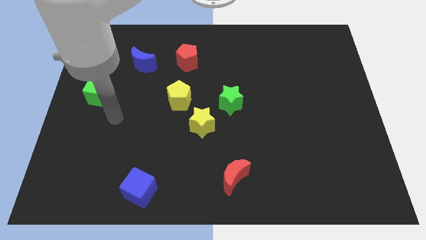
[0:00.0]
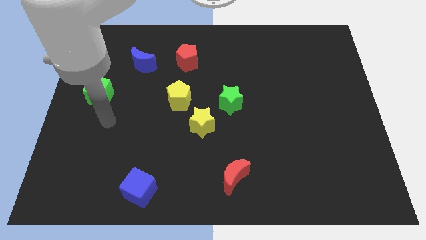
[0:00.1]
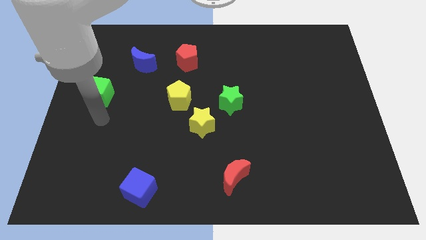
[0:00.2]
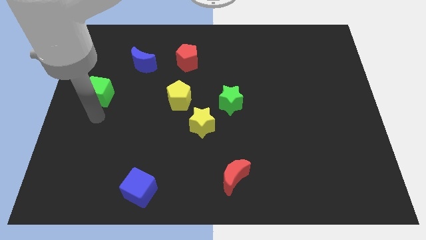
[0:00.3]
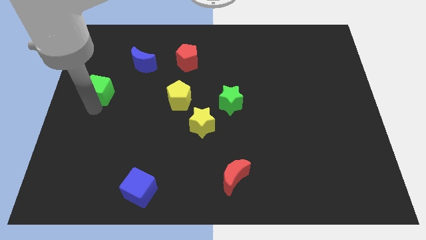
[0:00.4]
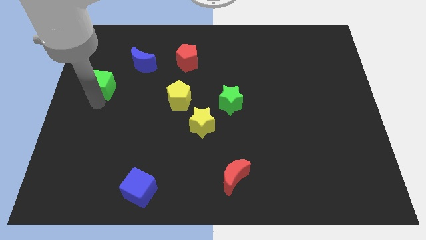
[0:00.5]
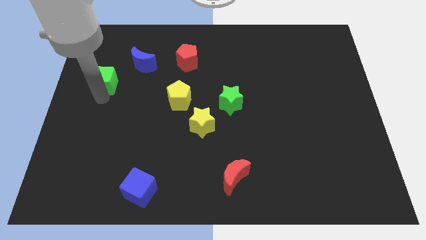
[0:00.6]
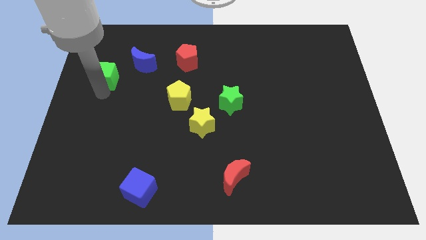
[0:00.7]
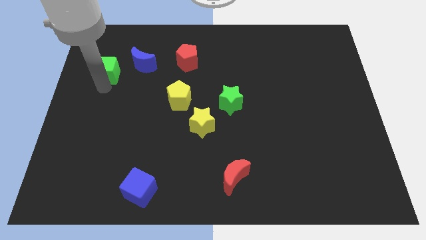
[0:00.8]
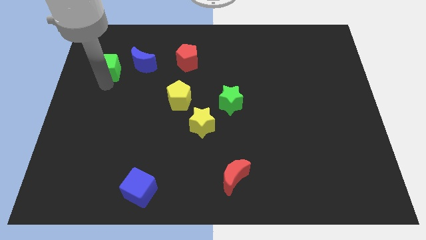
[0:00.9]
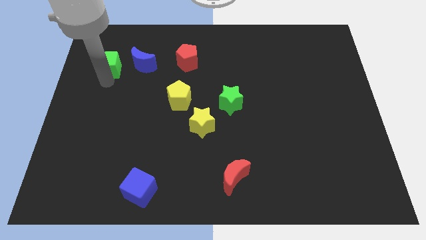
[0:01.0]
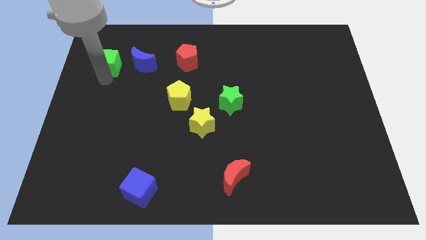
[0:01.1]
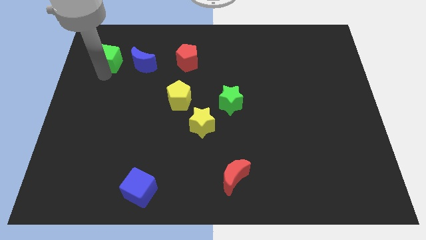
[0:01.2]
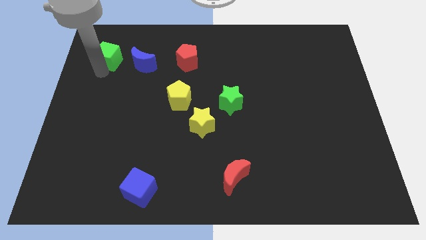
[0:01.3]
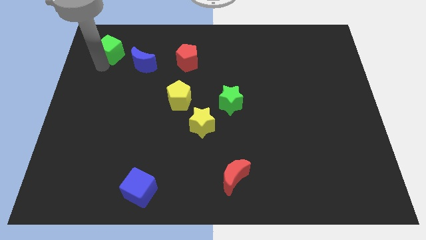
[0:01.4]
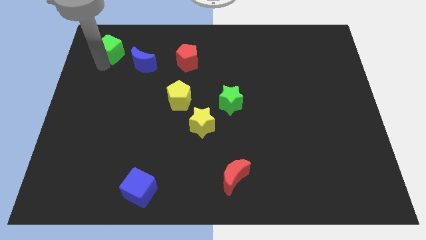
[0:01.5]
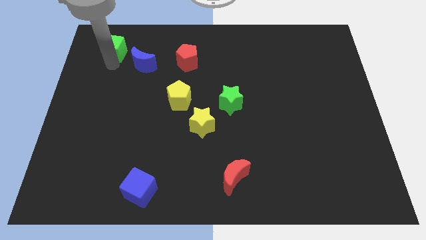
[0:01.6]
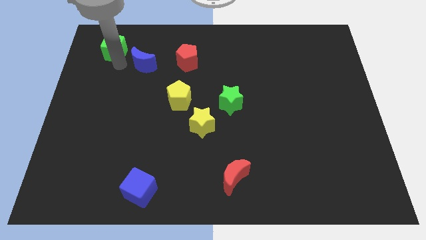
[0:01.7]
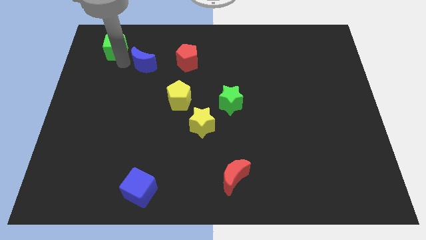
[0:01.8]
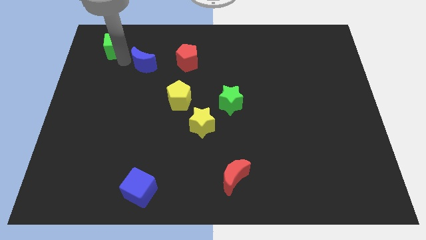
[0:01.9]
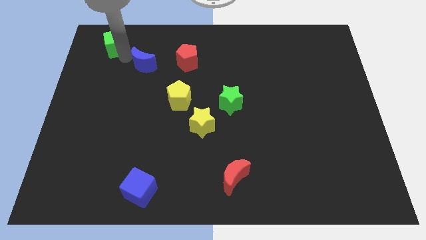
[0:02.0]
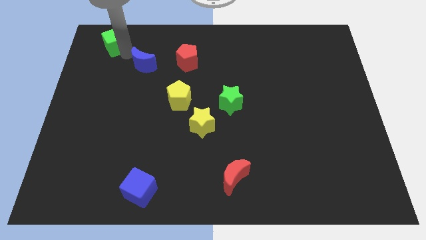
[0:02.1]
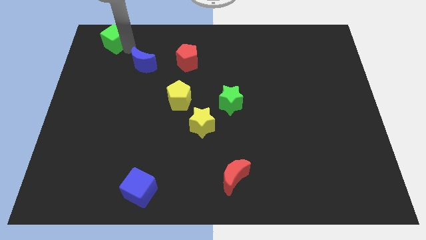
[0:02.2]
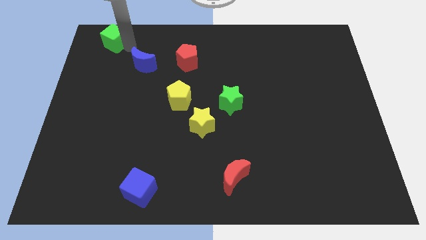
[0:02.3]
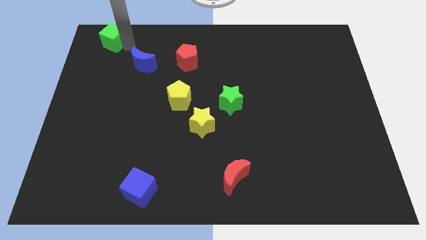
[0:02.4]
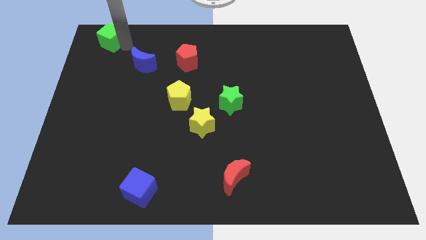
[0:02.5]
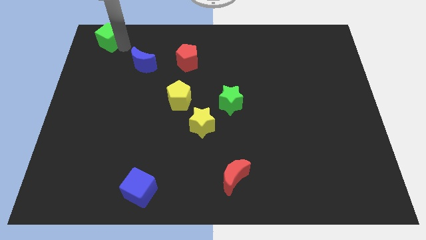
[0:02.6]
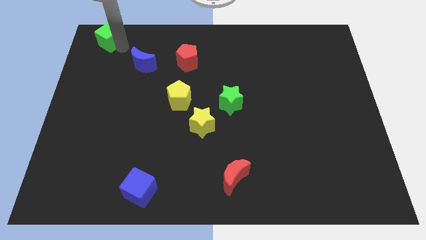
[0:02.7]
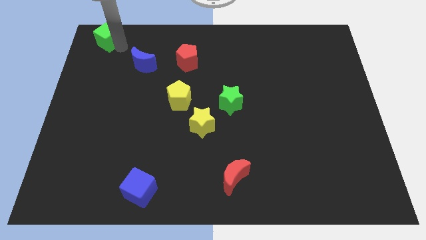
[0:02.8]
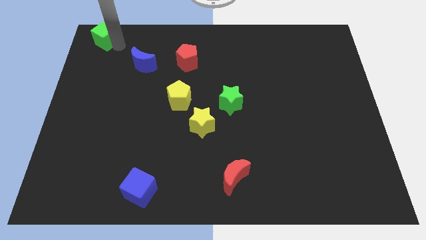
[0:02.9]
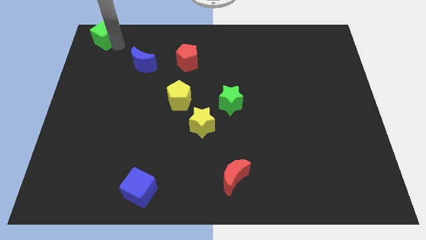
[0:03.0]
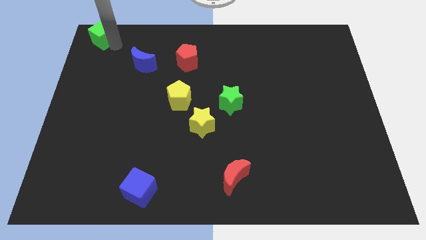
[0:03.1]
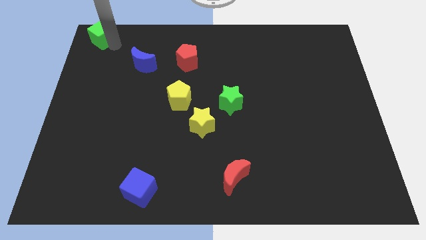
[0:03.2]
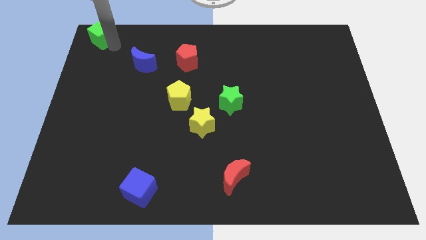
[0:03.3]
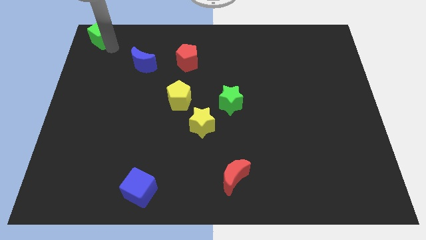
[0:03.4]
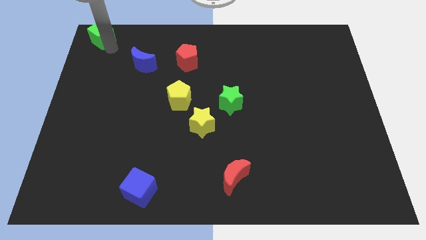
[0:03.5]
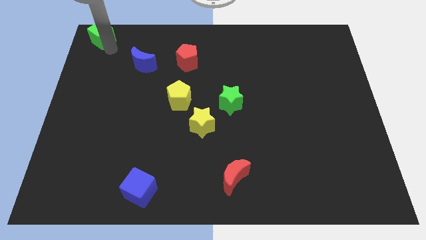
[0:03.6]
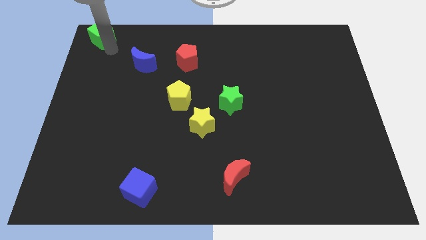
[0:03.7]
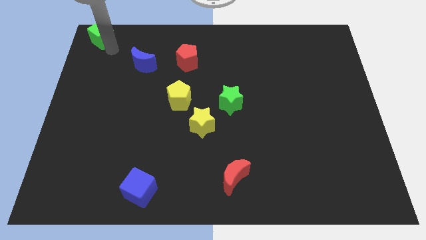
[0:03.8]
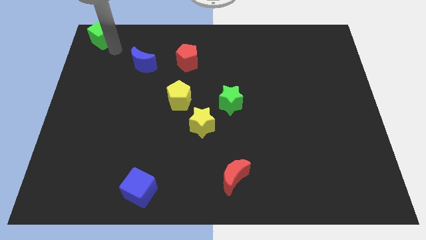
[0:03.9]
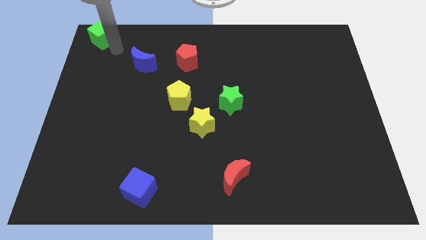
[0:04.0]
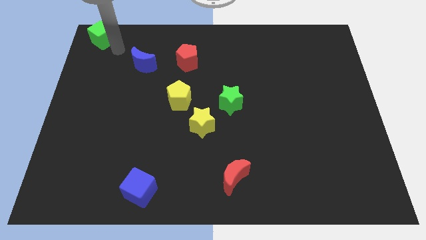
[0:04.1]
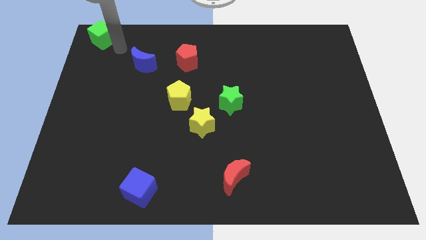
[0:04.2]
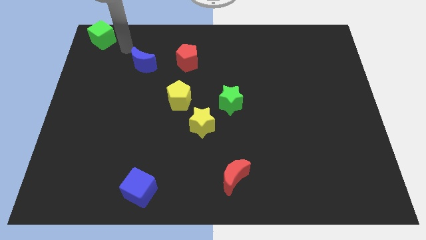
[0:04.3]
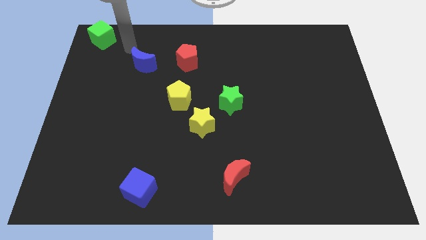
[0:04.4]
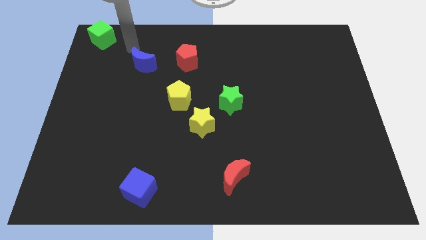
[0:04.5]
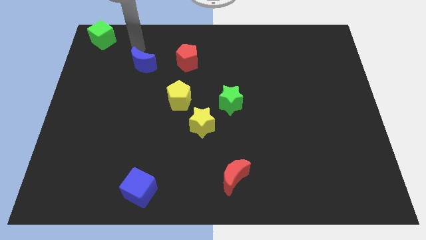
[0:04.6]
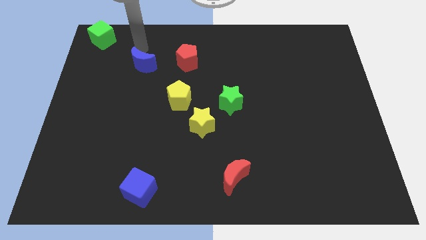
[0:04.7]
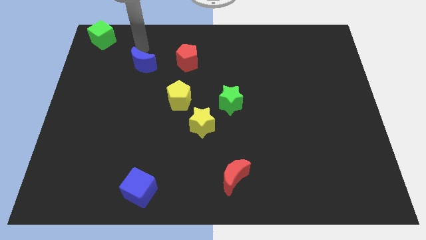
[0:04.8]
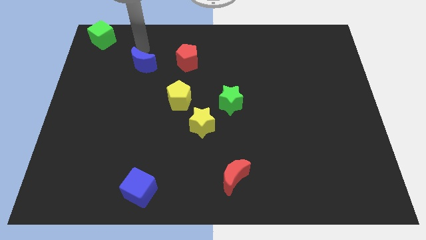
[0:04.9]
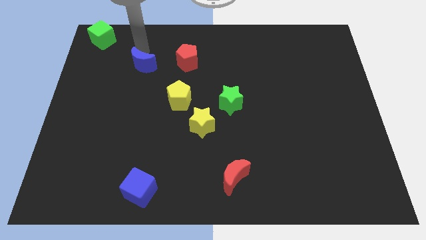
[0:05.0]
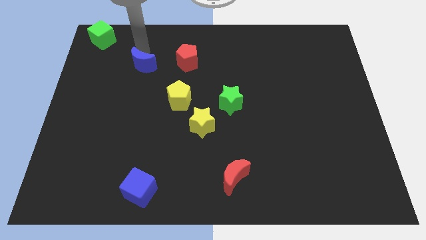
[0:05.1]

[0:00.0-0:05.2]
move the green cube to the top left corner

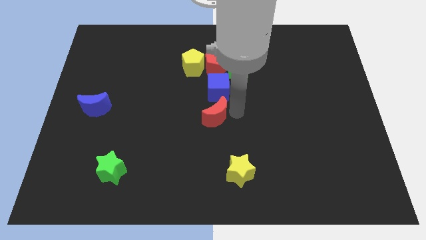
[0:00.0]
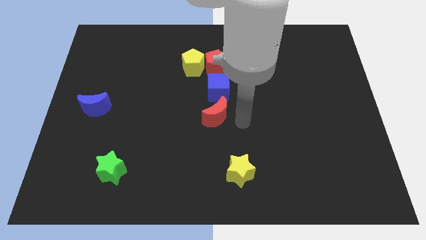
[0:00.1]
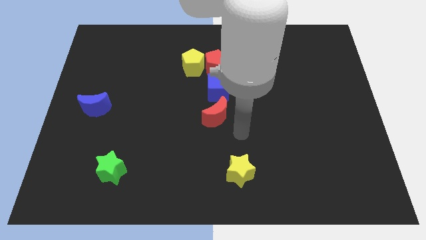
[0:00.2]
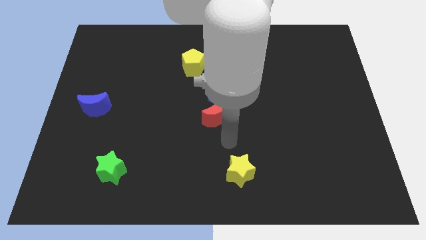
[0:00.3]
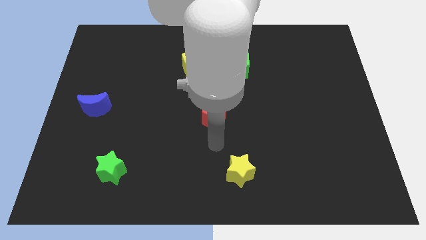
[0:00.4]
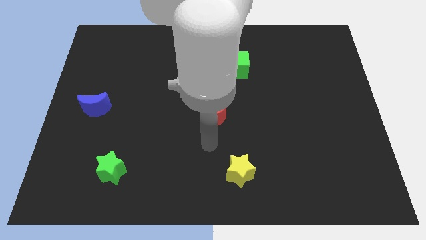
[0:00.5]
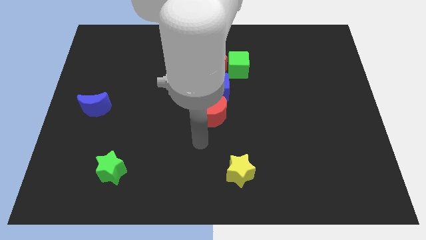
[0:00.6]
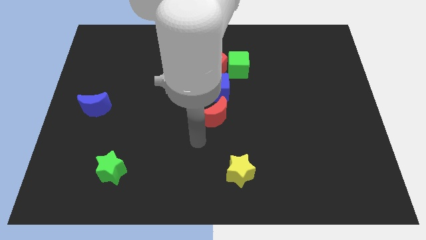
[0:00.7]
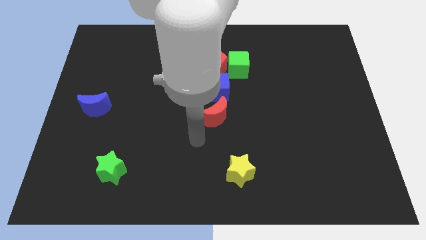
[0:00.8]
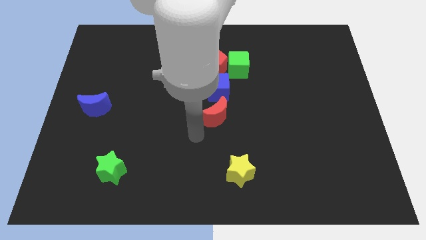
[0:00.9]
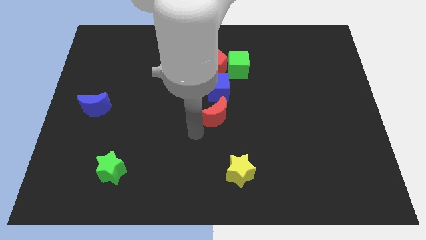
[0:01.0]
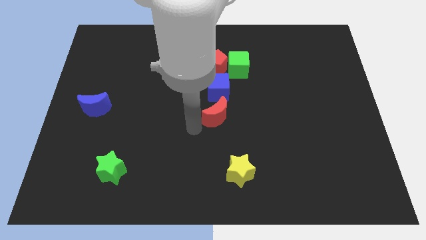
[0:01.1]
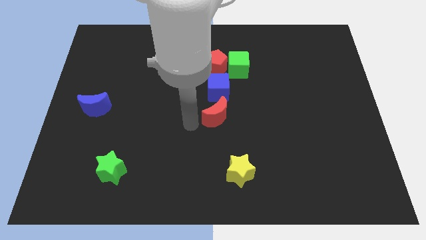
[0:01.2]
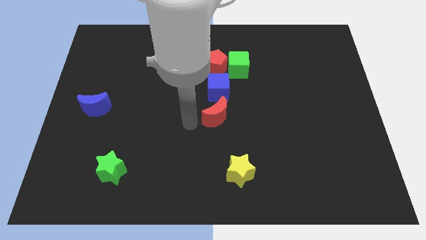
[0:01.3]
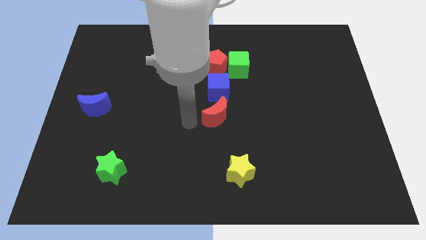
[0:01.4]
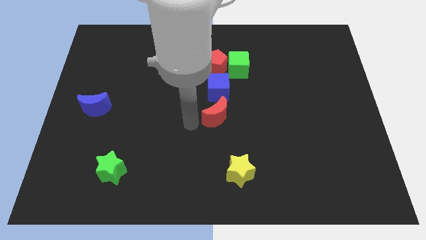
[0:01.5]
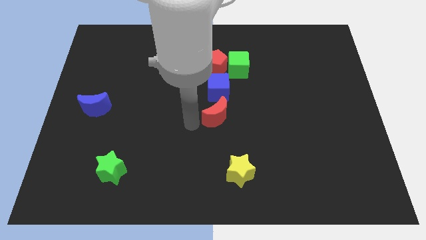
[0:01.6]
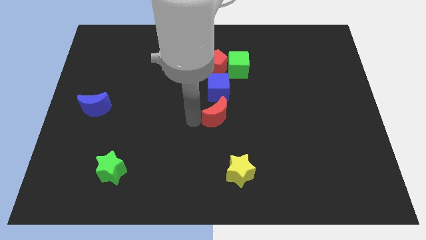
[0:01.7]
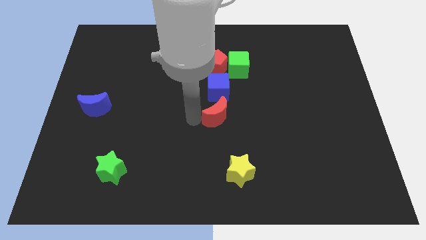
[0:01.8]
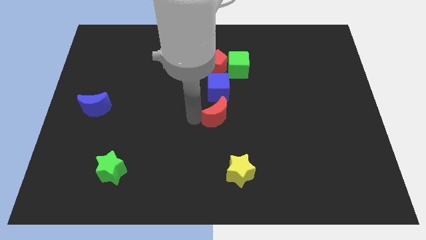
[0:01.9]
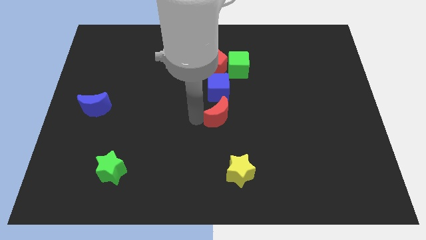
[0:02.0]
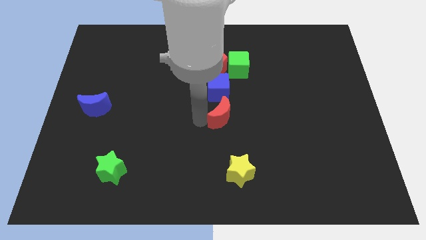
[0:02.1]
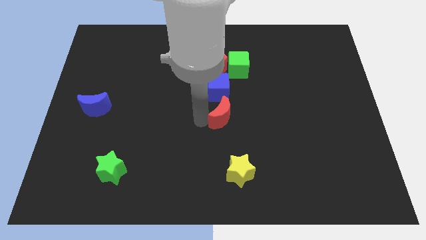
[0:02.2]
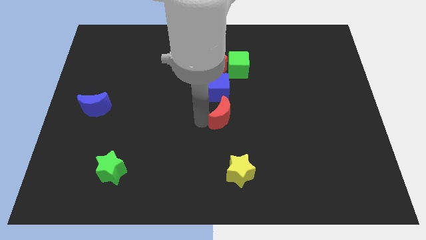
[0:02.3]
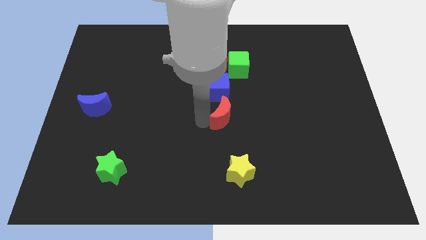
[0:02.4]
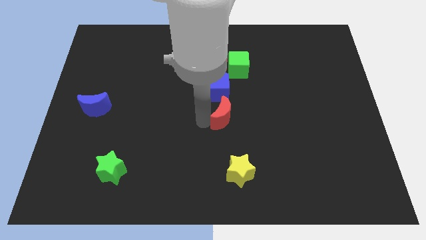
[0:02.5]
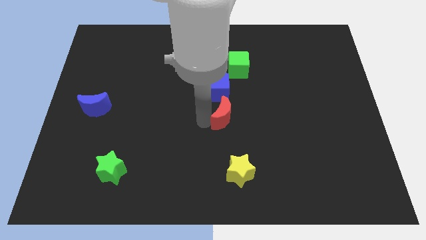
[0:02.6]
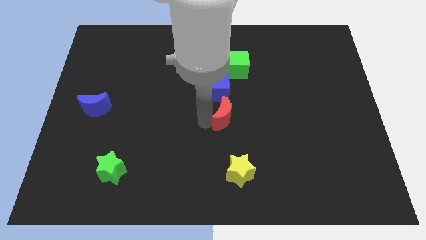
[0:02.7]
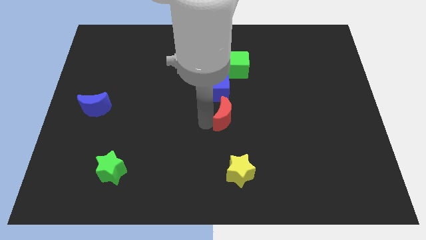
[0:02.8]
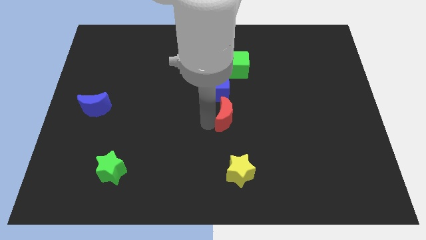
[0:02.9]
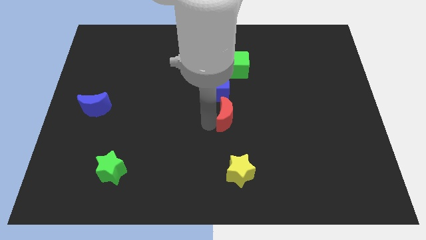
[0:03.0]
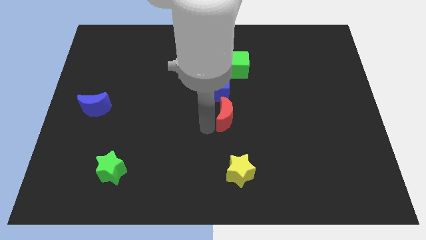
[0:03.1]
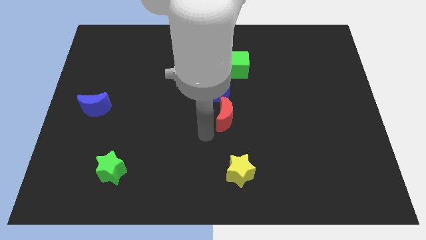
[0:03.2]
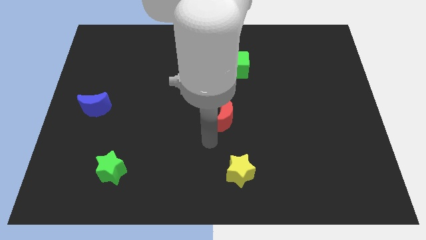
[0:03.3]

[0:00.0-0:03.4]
adjust the red crescent in vertical position

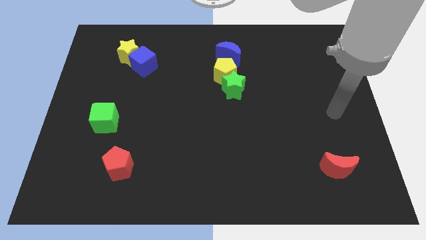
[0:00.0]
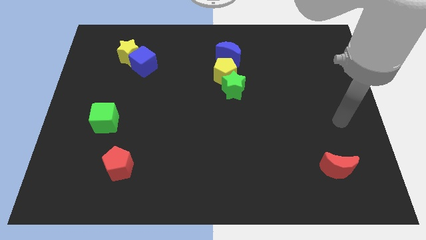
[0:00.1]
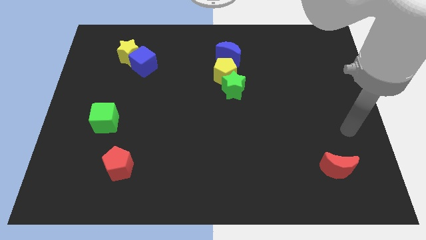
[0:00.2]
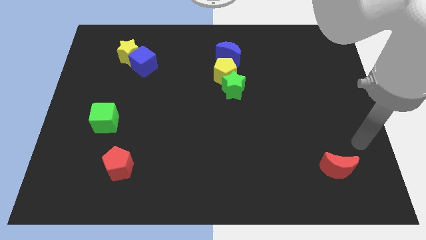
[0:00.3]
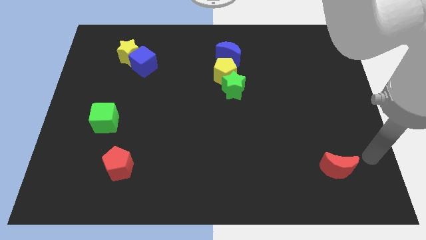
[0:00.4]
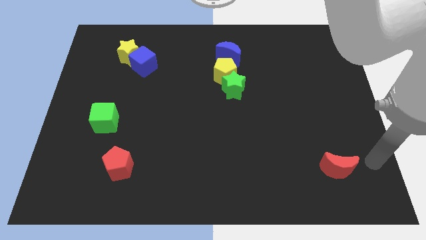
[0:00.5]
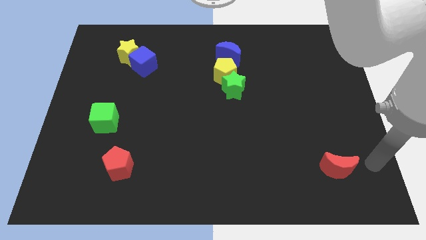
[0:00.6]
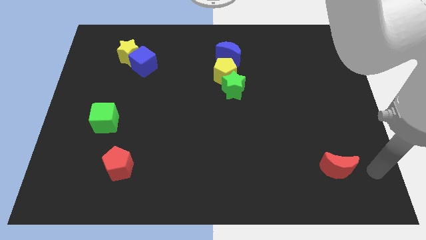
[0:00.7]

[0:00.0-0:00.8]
place your arm to the right side of red moon
